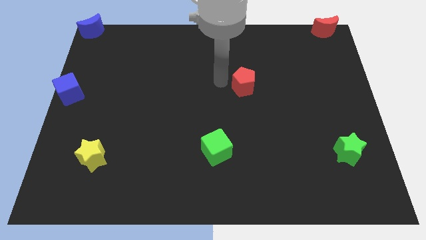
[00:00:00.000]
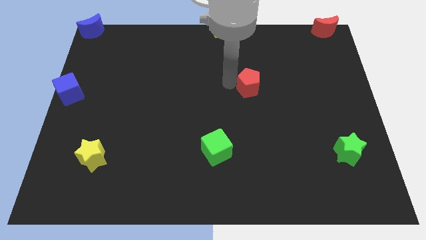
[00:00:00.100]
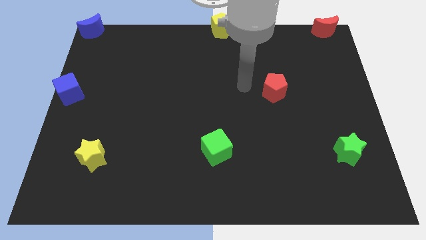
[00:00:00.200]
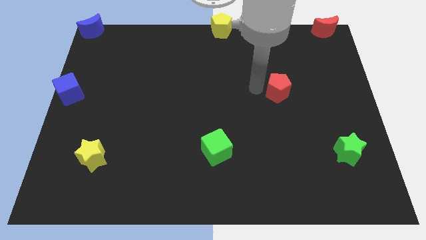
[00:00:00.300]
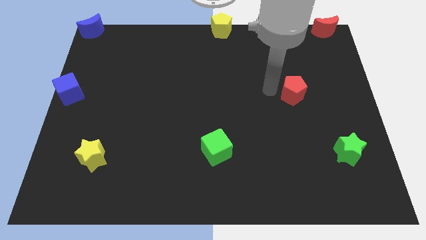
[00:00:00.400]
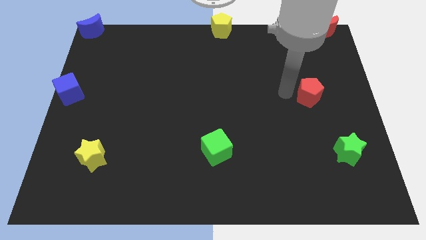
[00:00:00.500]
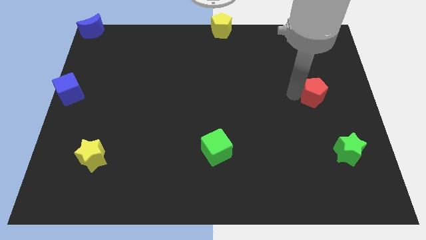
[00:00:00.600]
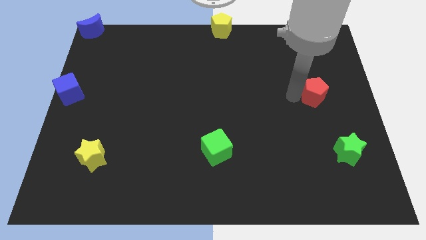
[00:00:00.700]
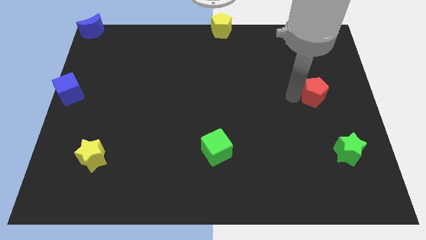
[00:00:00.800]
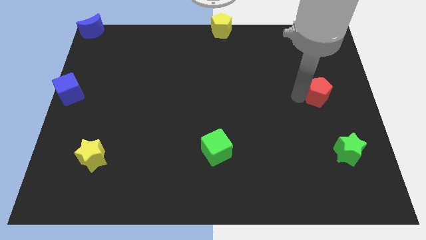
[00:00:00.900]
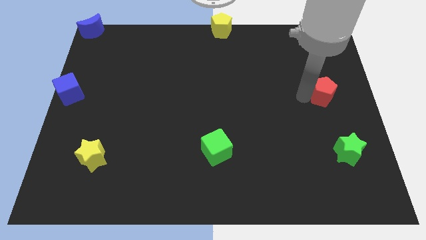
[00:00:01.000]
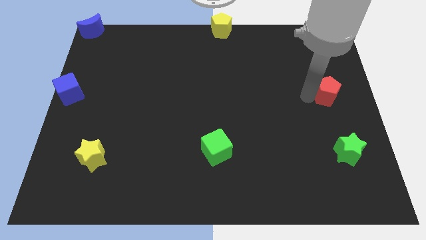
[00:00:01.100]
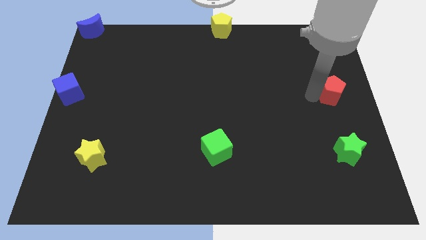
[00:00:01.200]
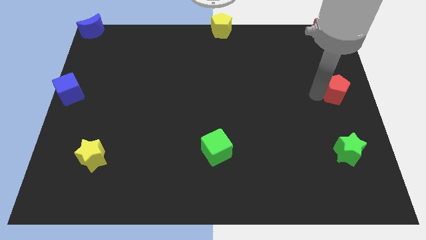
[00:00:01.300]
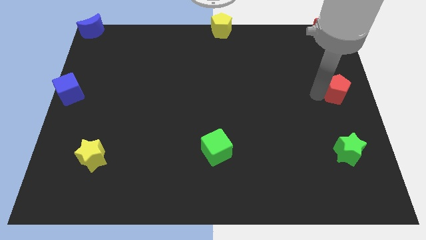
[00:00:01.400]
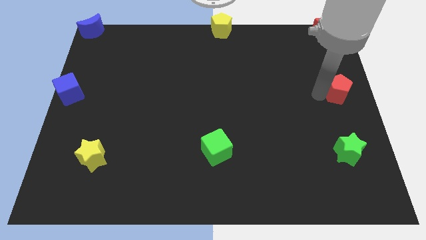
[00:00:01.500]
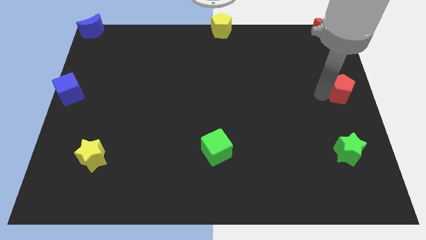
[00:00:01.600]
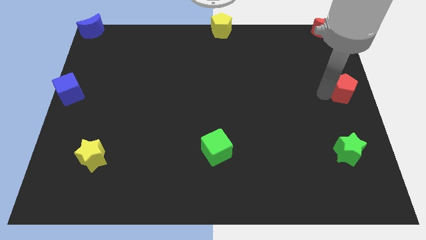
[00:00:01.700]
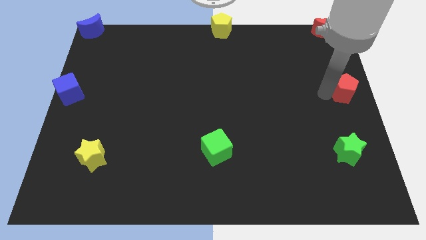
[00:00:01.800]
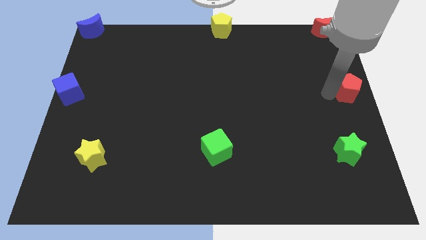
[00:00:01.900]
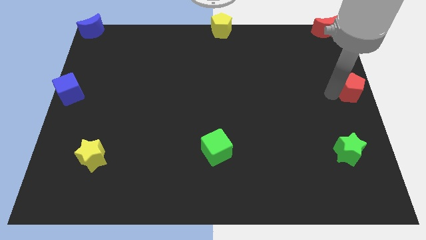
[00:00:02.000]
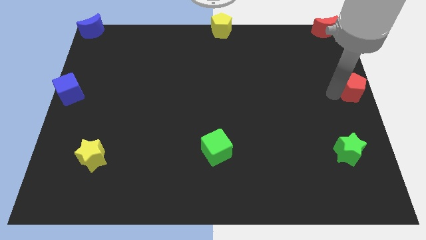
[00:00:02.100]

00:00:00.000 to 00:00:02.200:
move the red pentagon towards the center right

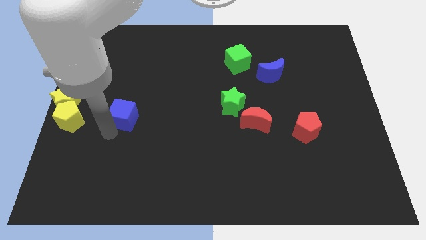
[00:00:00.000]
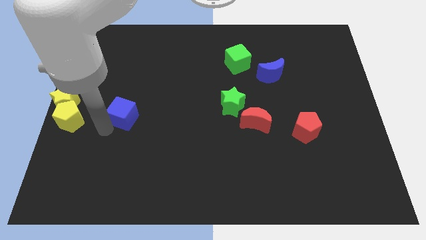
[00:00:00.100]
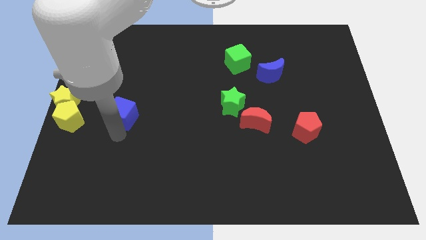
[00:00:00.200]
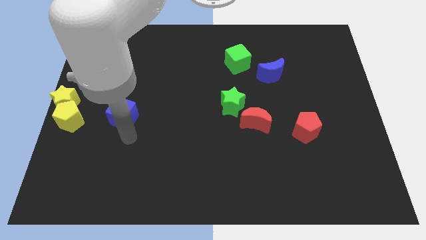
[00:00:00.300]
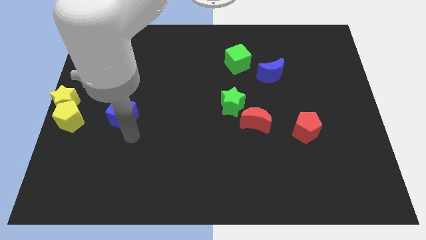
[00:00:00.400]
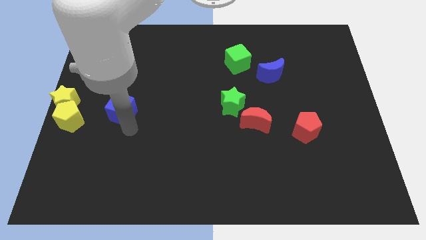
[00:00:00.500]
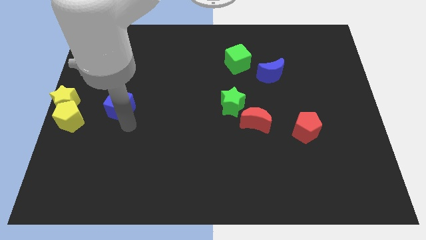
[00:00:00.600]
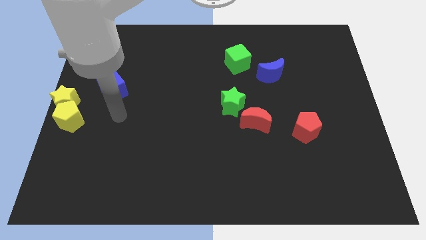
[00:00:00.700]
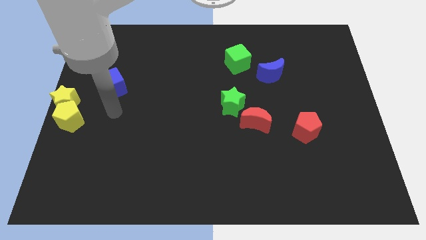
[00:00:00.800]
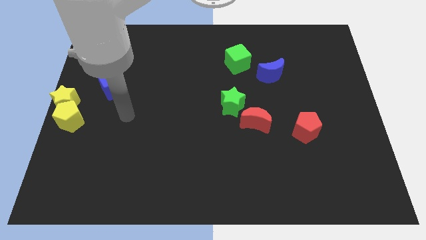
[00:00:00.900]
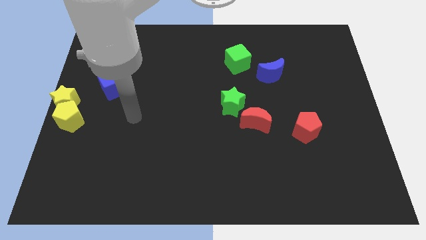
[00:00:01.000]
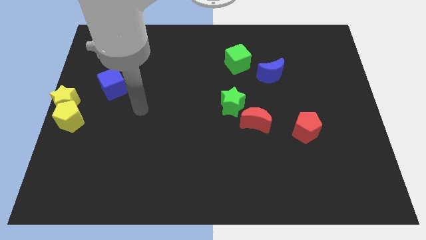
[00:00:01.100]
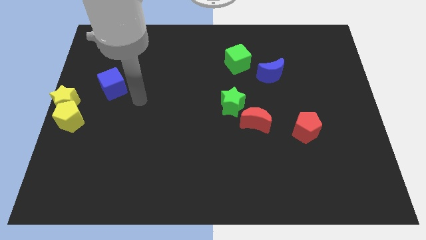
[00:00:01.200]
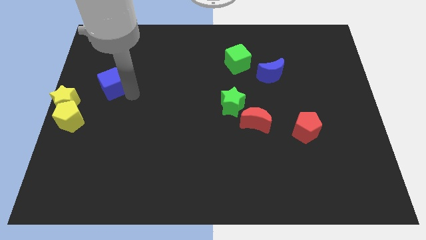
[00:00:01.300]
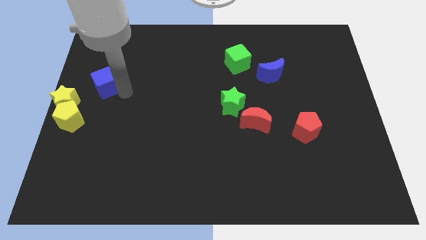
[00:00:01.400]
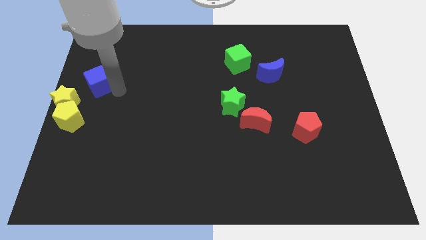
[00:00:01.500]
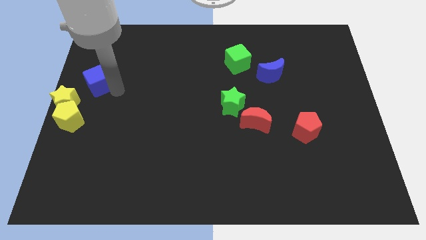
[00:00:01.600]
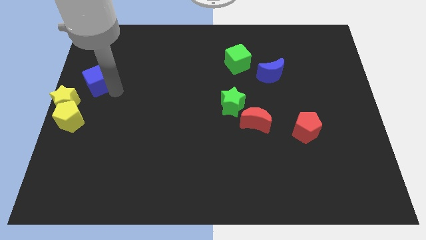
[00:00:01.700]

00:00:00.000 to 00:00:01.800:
move the blue cube diagonally top right to the yellow pentagon

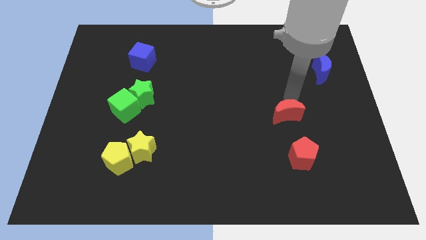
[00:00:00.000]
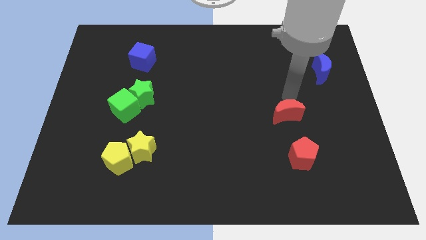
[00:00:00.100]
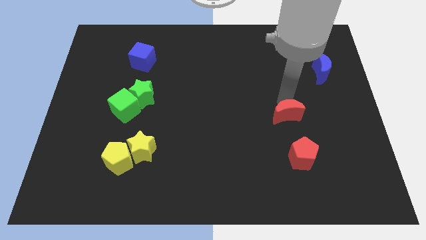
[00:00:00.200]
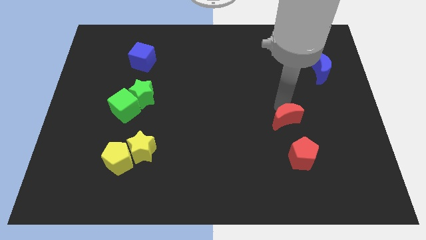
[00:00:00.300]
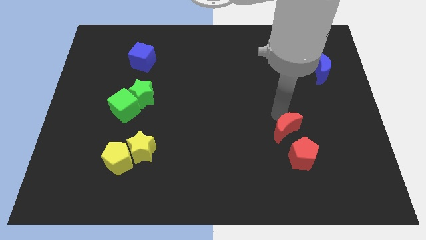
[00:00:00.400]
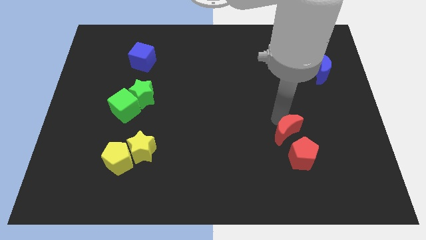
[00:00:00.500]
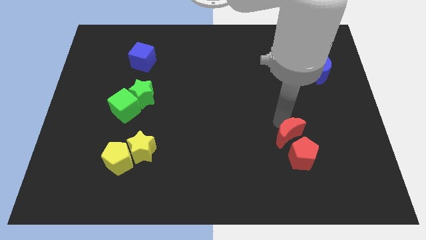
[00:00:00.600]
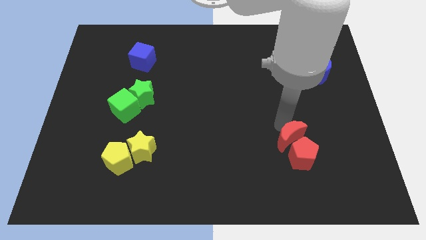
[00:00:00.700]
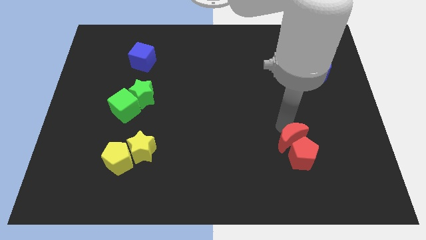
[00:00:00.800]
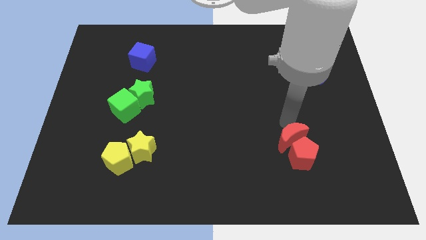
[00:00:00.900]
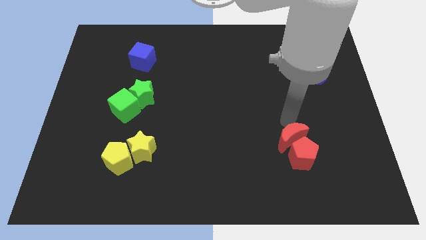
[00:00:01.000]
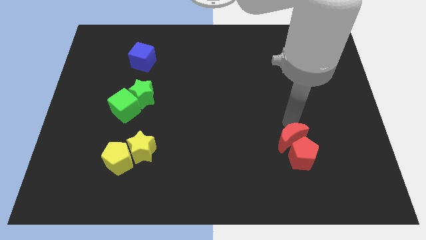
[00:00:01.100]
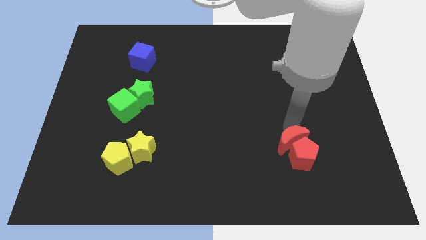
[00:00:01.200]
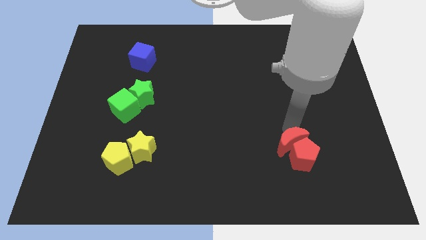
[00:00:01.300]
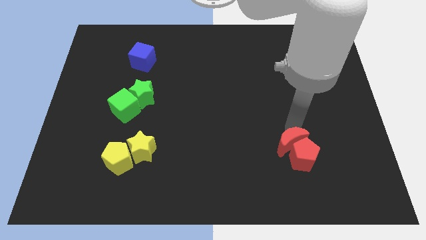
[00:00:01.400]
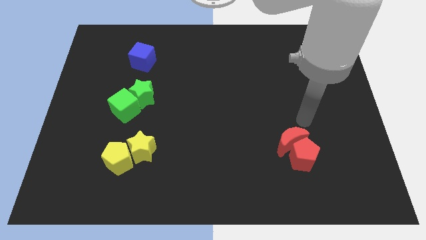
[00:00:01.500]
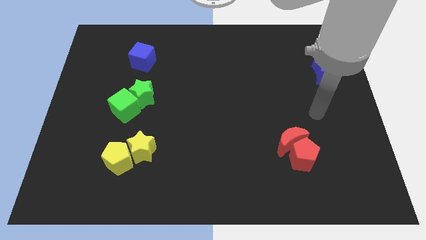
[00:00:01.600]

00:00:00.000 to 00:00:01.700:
slide the red moon into the red pentagon

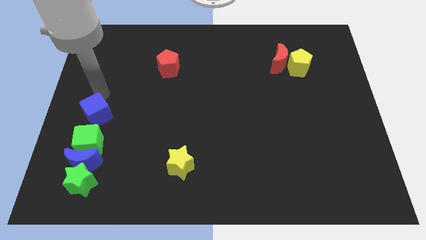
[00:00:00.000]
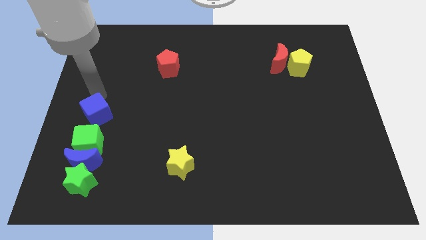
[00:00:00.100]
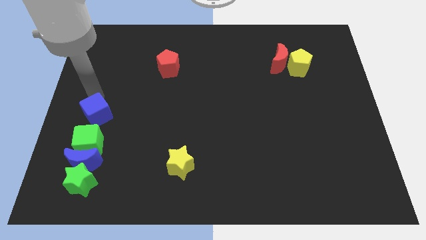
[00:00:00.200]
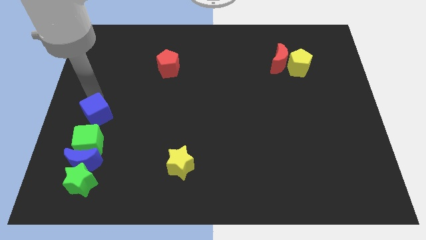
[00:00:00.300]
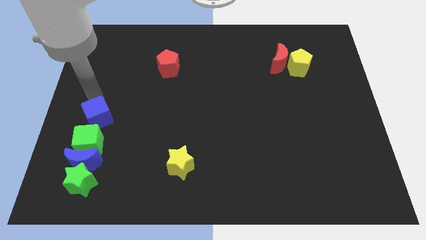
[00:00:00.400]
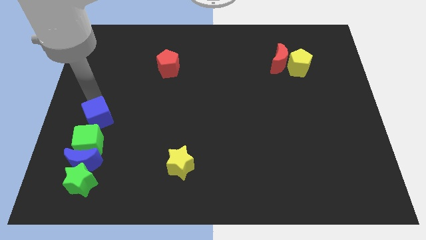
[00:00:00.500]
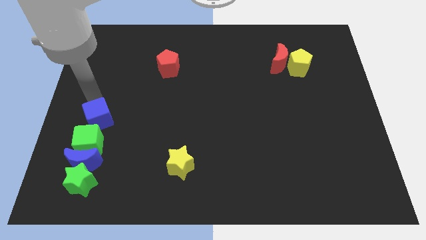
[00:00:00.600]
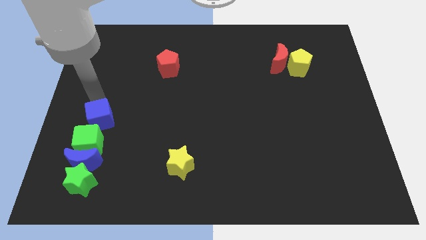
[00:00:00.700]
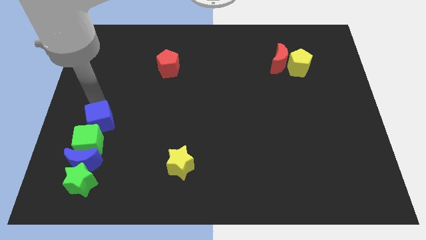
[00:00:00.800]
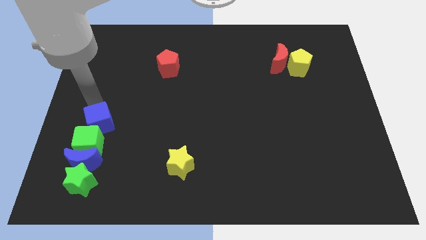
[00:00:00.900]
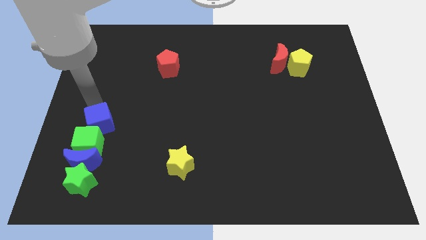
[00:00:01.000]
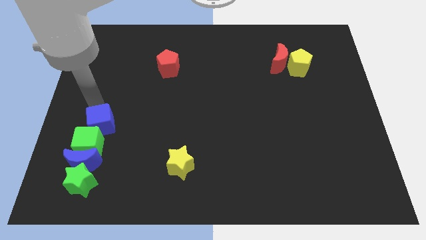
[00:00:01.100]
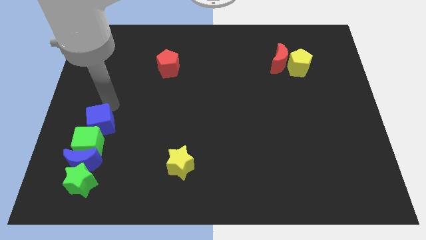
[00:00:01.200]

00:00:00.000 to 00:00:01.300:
slide the blue cube into the green cube

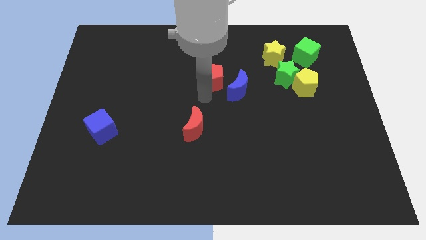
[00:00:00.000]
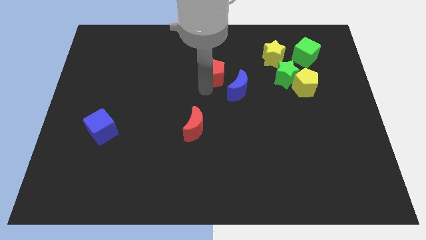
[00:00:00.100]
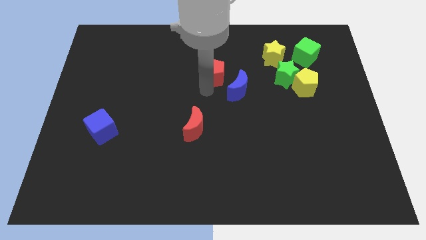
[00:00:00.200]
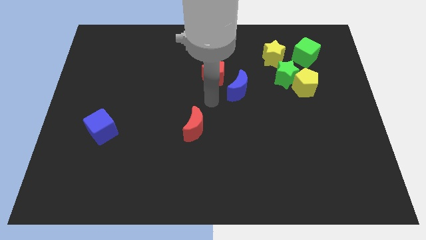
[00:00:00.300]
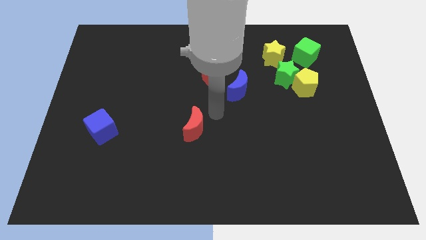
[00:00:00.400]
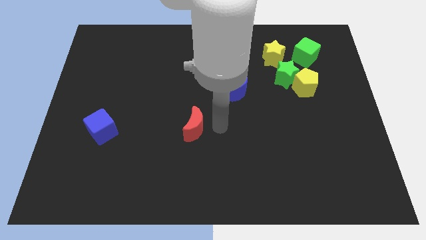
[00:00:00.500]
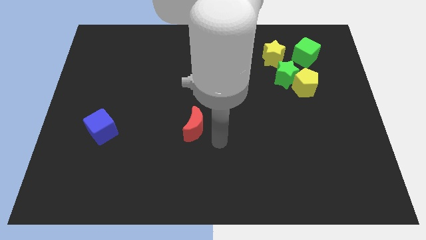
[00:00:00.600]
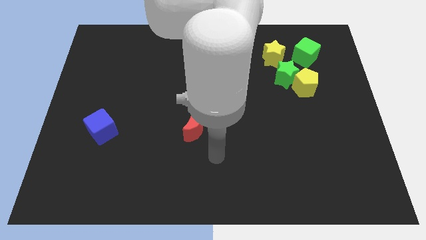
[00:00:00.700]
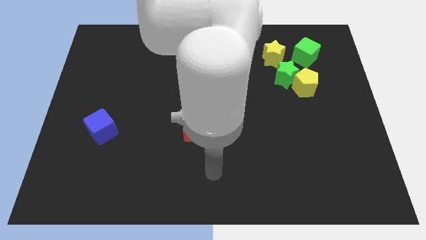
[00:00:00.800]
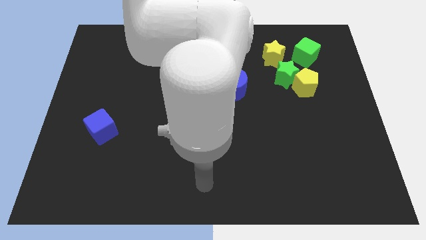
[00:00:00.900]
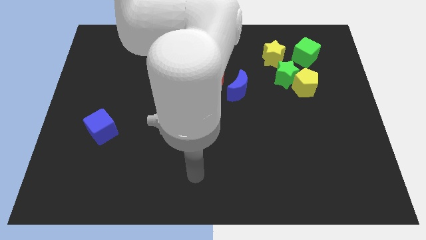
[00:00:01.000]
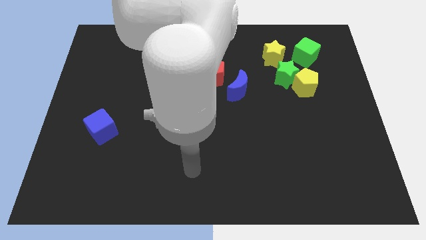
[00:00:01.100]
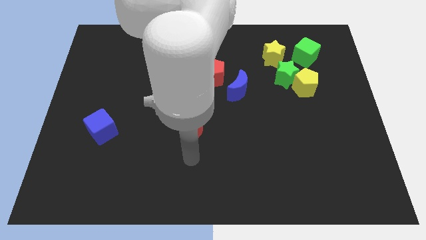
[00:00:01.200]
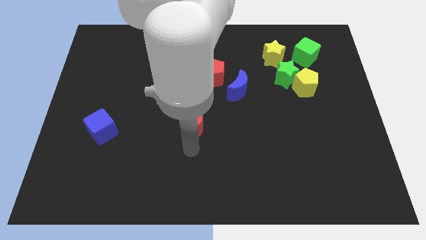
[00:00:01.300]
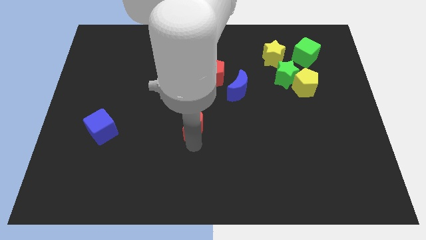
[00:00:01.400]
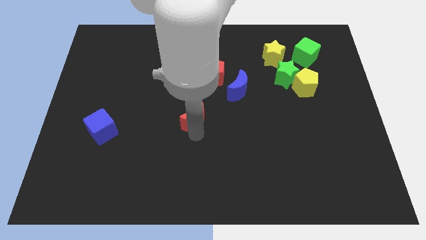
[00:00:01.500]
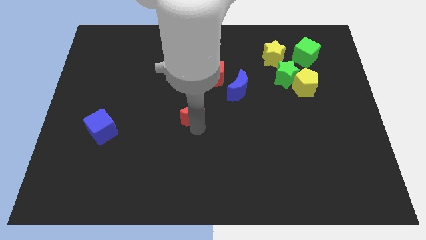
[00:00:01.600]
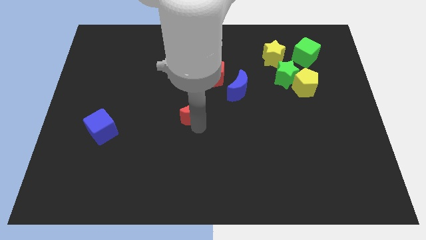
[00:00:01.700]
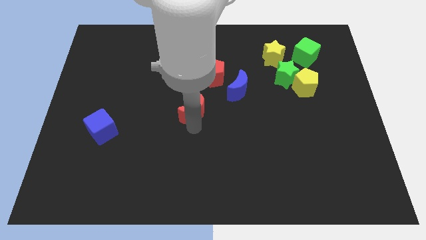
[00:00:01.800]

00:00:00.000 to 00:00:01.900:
move red crescent slightly up
